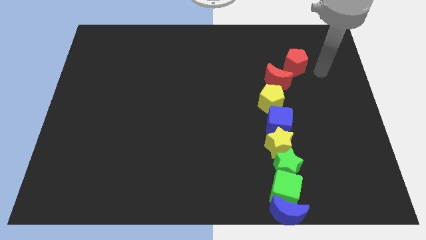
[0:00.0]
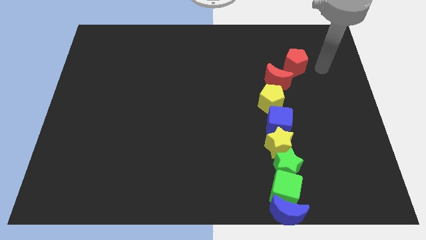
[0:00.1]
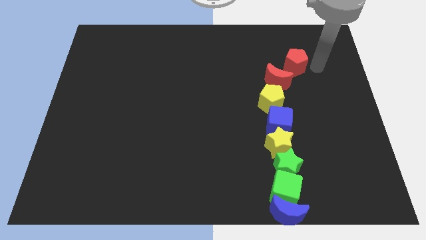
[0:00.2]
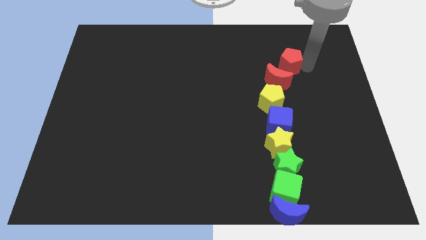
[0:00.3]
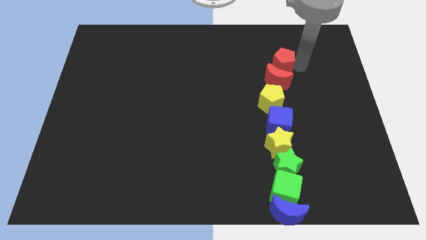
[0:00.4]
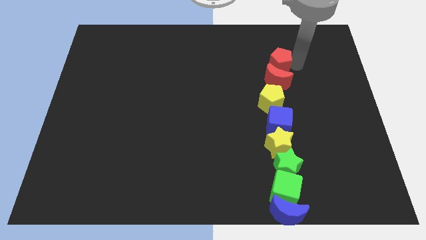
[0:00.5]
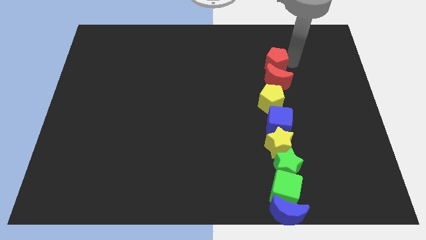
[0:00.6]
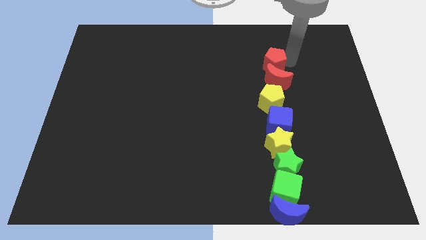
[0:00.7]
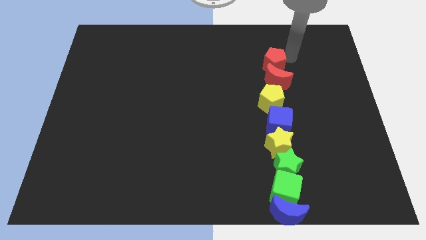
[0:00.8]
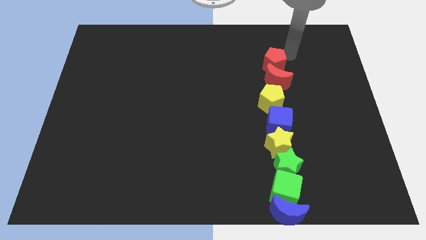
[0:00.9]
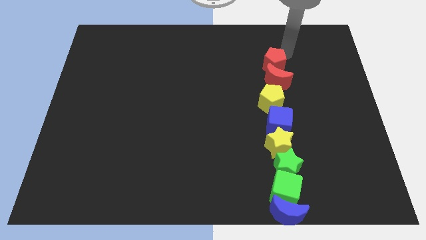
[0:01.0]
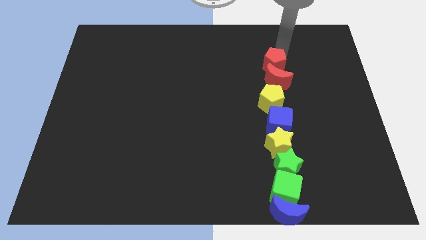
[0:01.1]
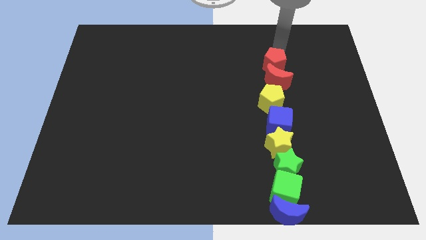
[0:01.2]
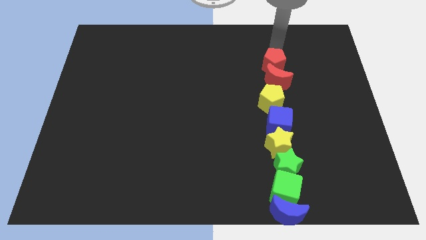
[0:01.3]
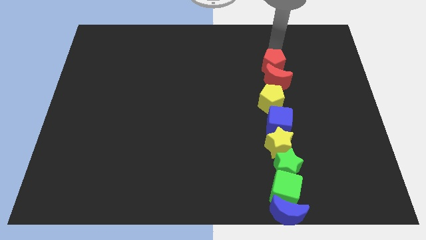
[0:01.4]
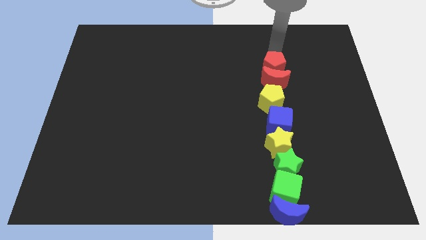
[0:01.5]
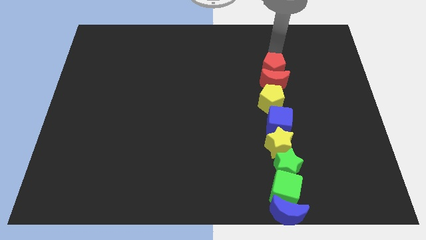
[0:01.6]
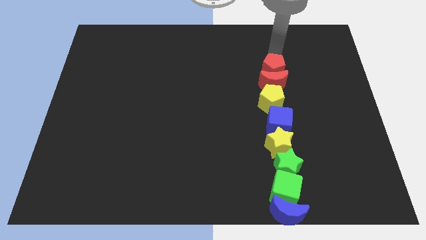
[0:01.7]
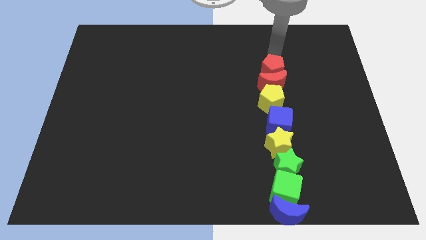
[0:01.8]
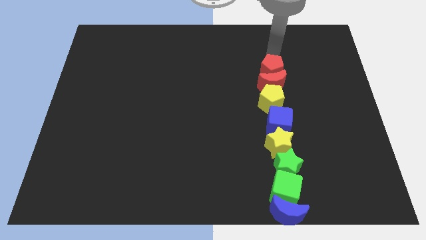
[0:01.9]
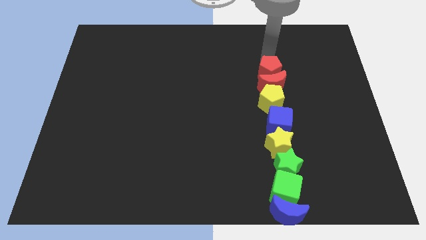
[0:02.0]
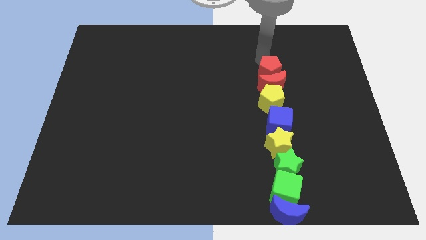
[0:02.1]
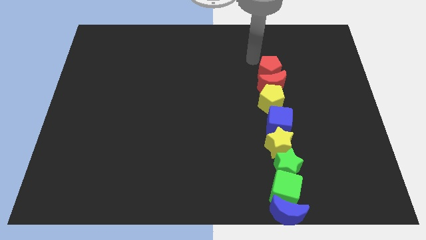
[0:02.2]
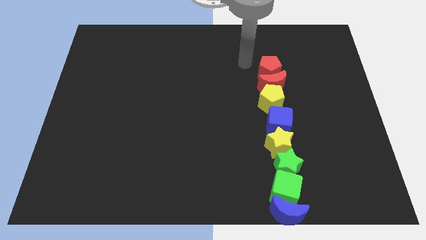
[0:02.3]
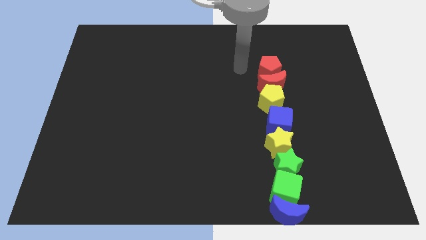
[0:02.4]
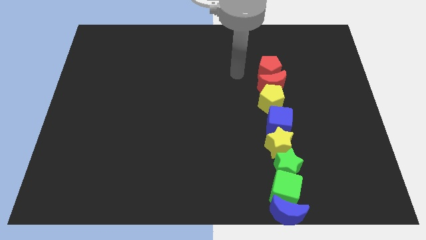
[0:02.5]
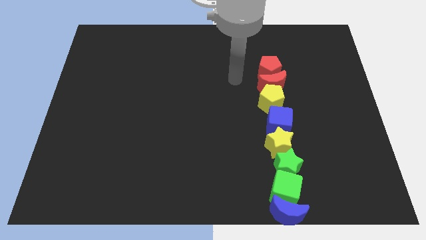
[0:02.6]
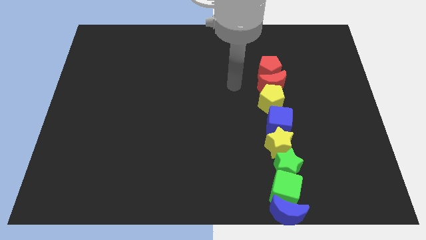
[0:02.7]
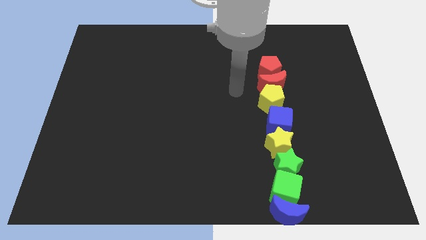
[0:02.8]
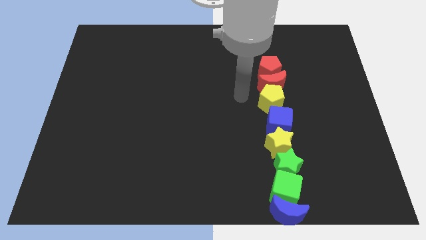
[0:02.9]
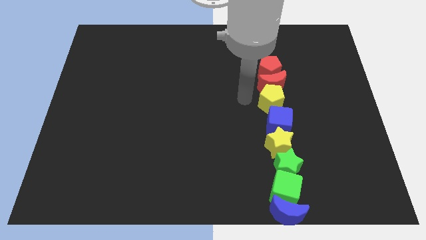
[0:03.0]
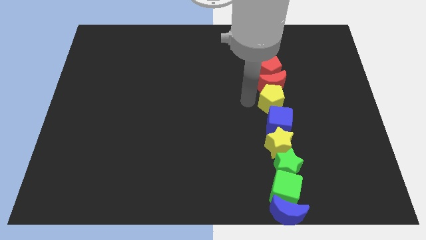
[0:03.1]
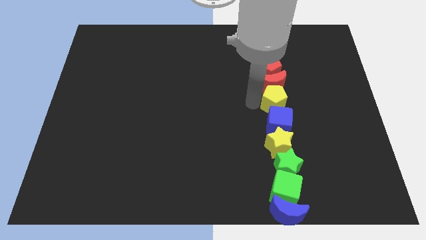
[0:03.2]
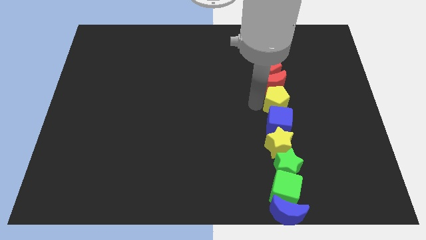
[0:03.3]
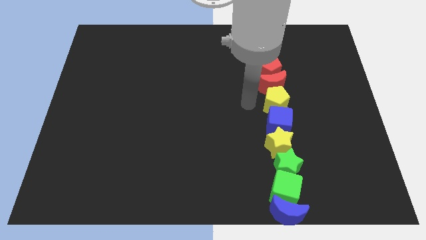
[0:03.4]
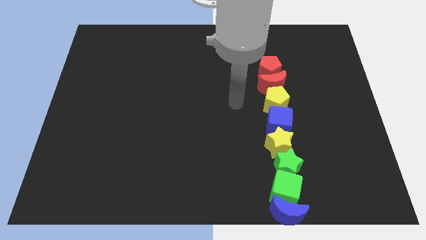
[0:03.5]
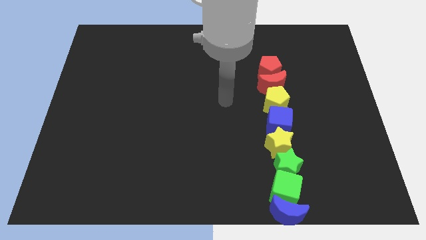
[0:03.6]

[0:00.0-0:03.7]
adjust the yellow pentagon and both red blocks to form a vertical line of blocks

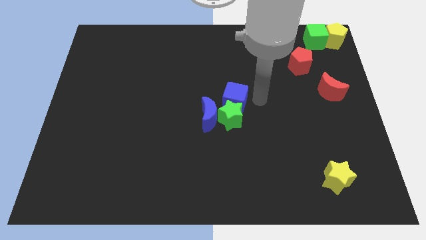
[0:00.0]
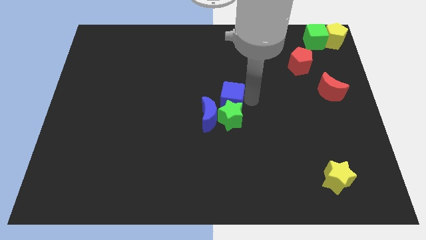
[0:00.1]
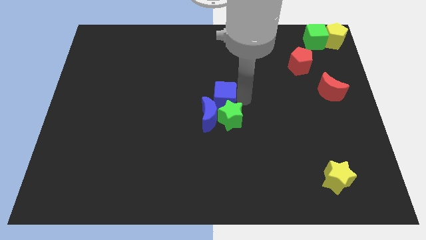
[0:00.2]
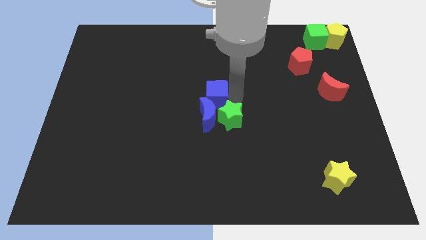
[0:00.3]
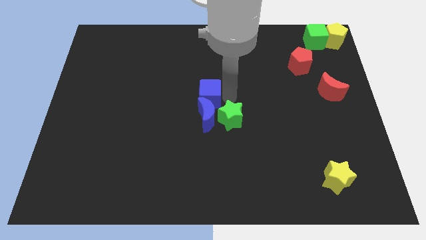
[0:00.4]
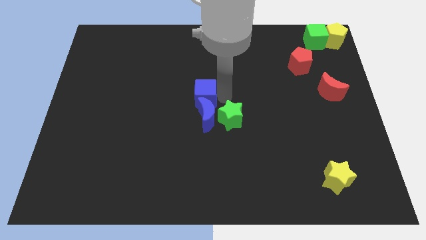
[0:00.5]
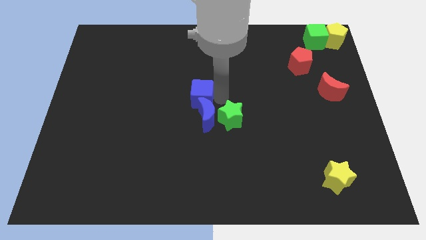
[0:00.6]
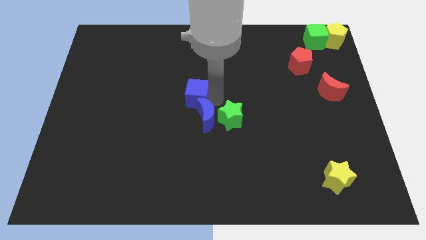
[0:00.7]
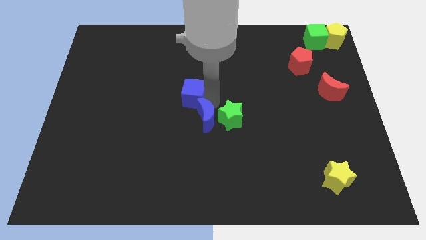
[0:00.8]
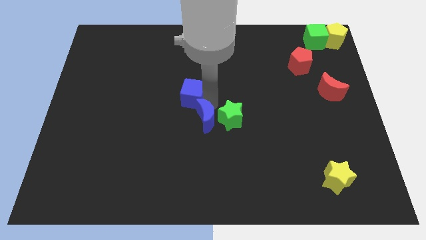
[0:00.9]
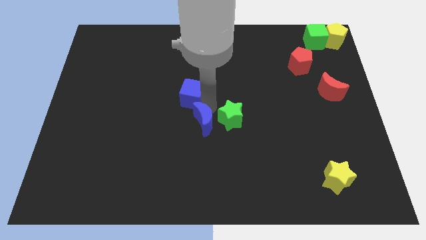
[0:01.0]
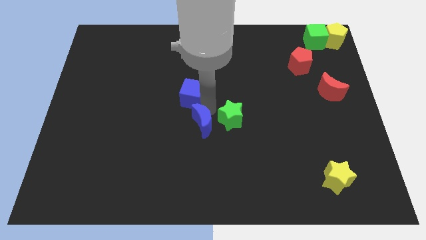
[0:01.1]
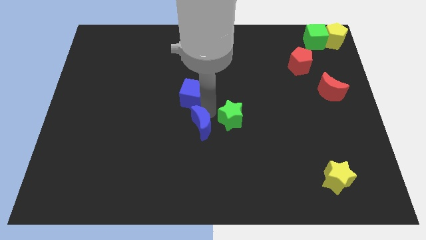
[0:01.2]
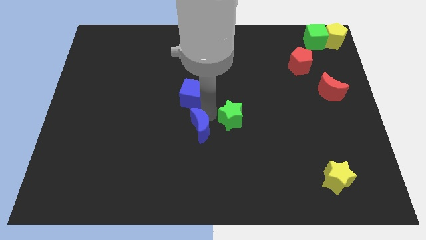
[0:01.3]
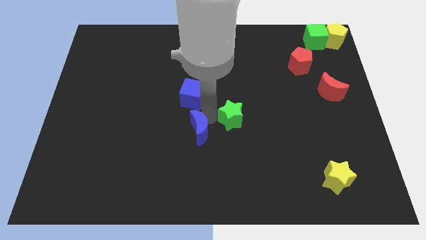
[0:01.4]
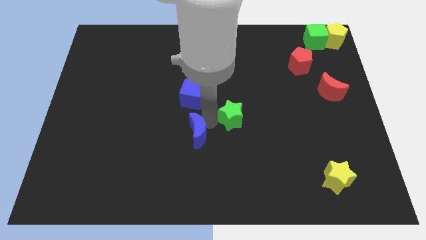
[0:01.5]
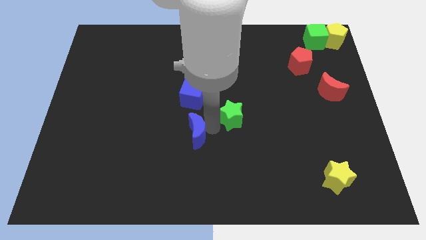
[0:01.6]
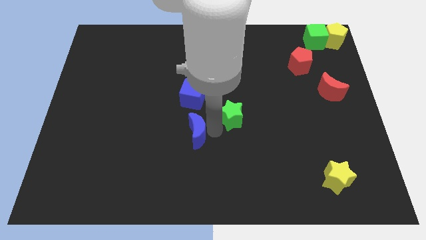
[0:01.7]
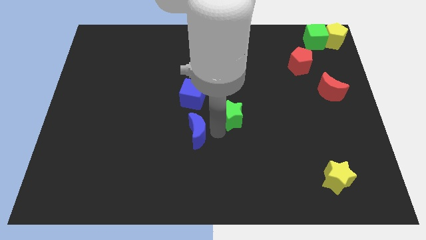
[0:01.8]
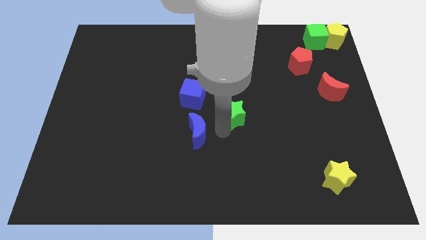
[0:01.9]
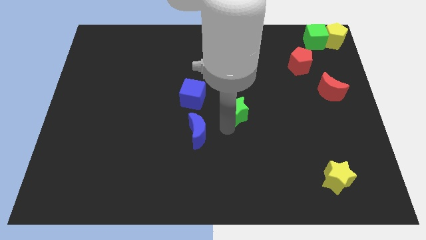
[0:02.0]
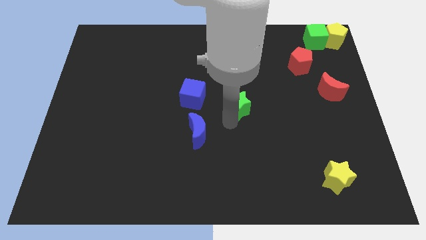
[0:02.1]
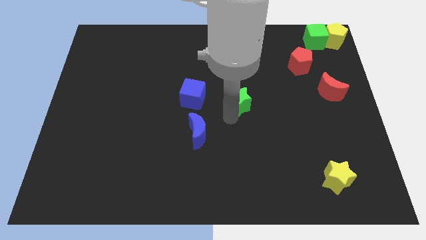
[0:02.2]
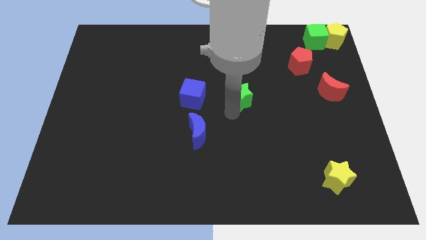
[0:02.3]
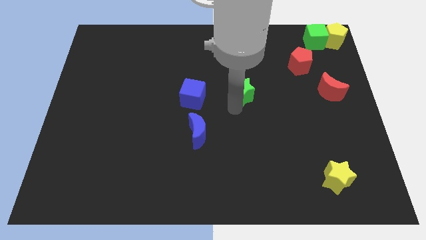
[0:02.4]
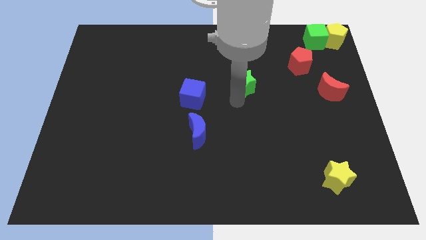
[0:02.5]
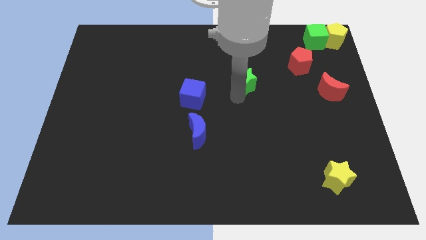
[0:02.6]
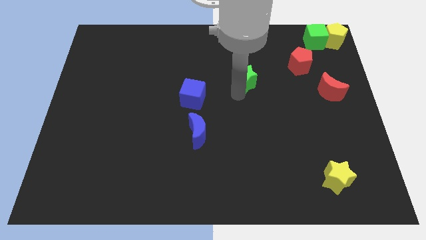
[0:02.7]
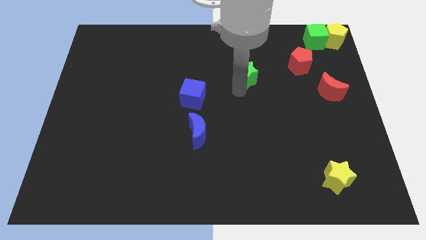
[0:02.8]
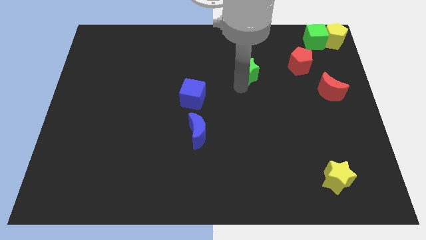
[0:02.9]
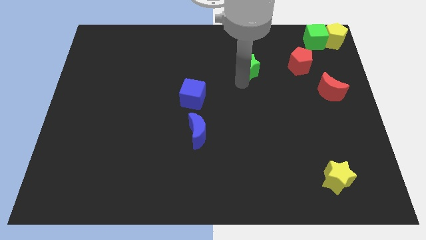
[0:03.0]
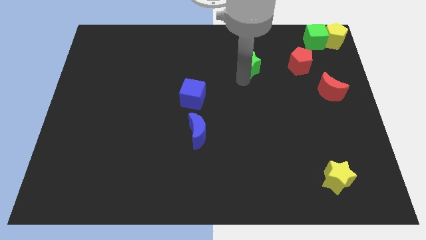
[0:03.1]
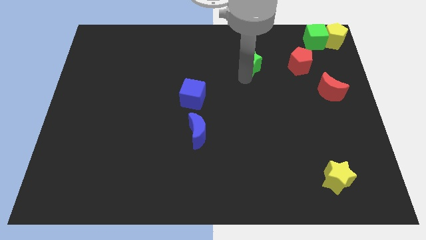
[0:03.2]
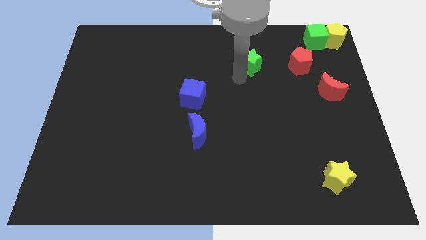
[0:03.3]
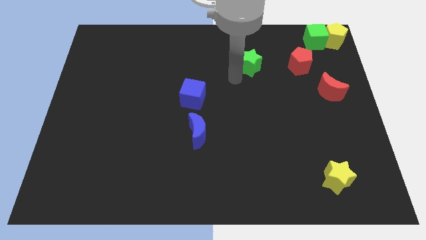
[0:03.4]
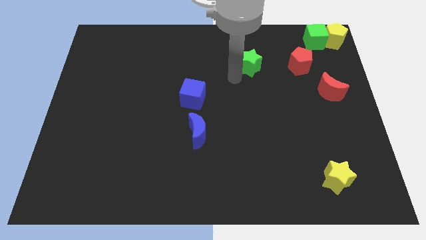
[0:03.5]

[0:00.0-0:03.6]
place the green star horizontally at the left side of the red pentagon

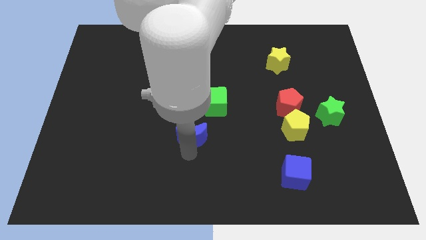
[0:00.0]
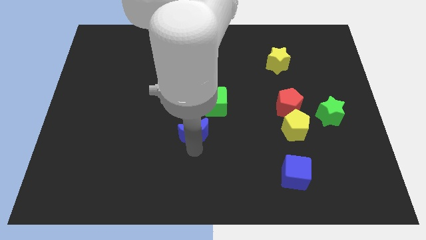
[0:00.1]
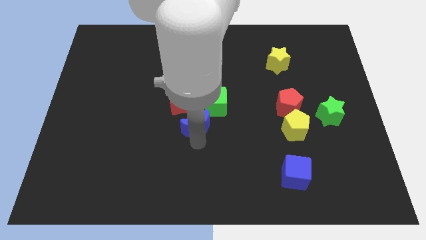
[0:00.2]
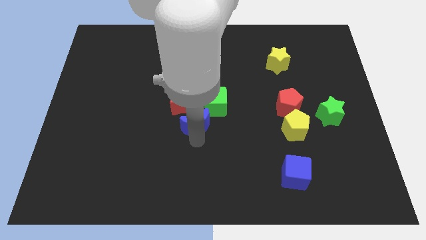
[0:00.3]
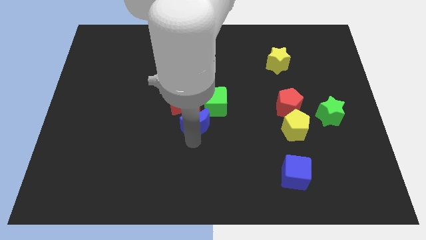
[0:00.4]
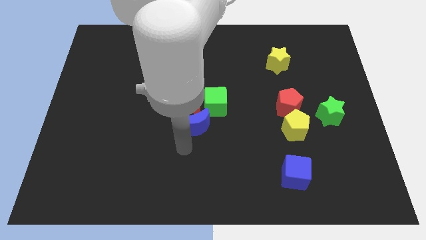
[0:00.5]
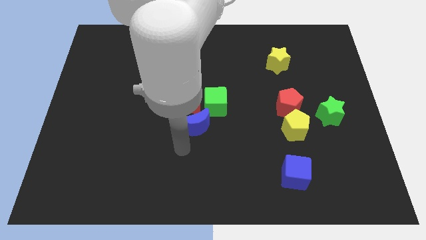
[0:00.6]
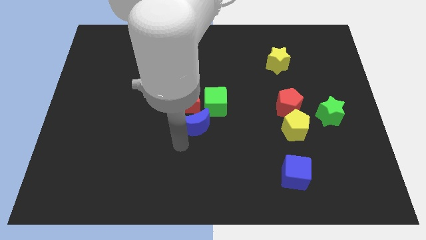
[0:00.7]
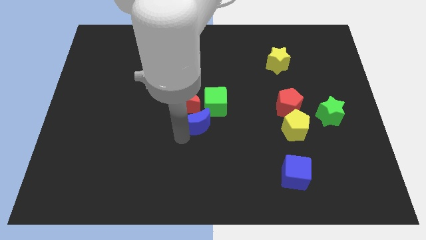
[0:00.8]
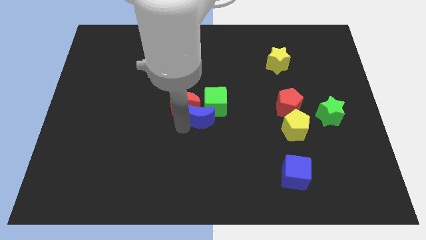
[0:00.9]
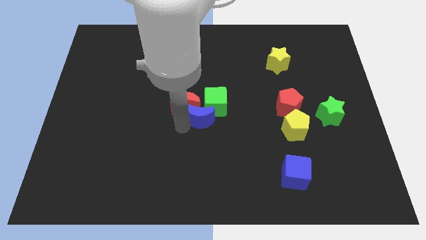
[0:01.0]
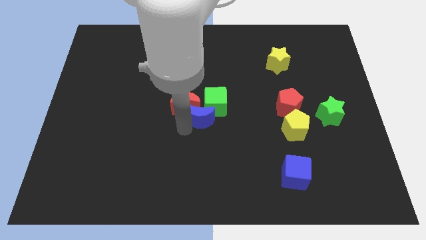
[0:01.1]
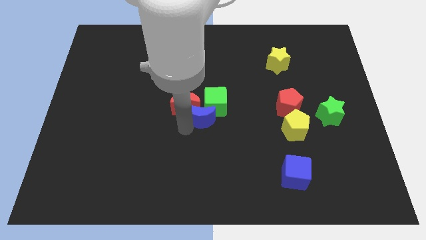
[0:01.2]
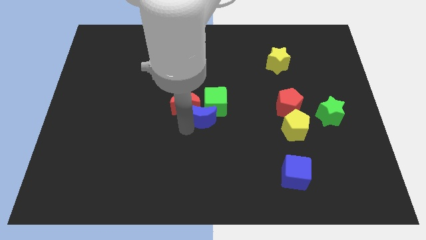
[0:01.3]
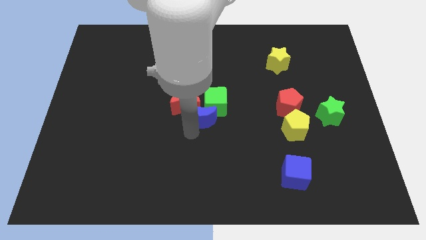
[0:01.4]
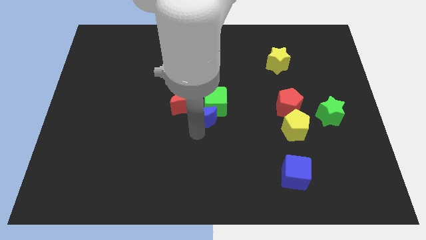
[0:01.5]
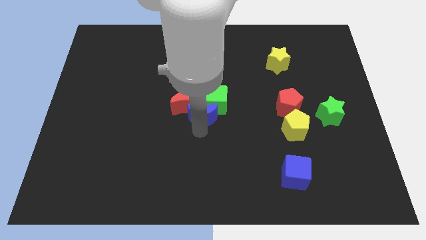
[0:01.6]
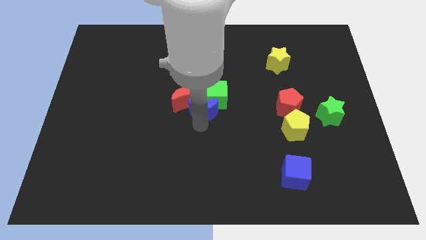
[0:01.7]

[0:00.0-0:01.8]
push the blue moon into the group of blocks

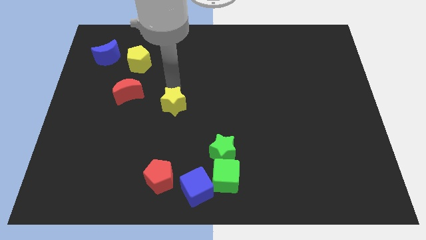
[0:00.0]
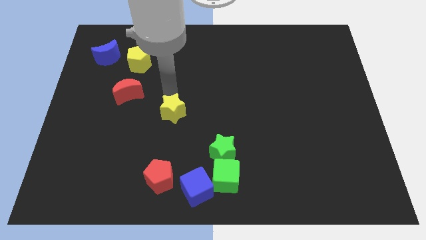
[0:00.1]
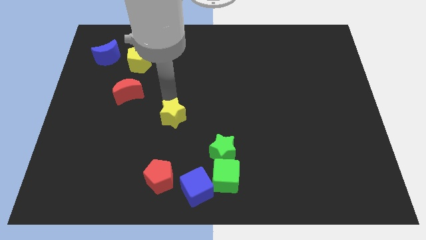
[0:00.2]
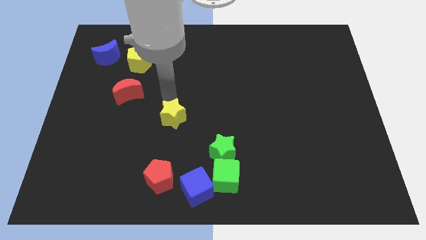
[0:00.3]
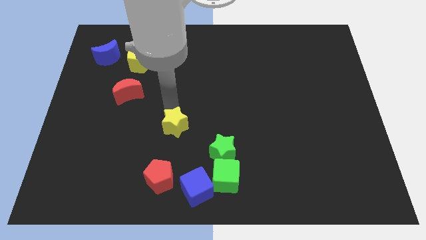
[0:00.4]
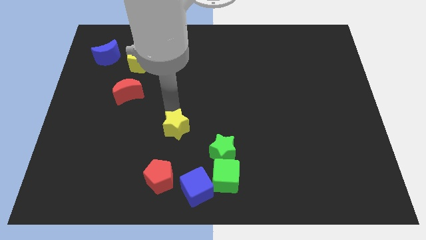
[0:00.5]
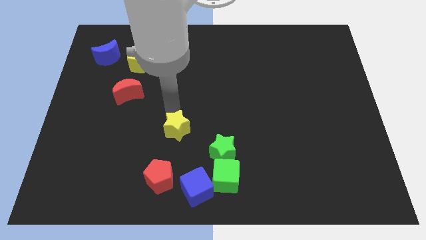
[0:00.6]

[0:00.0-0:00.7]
move the yellow star to the bottom center
